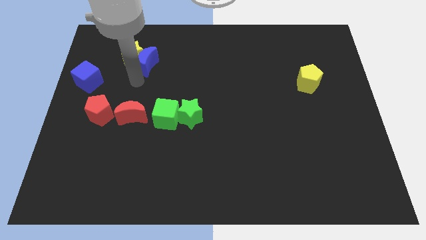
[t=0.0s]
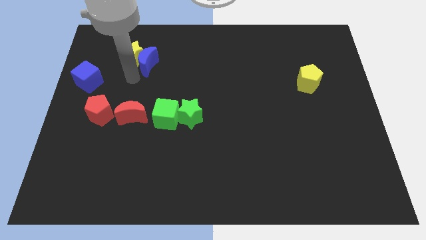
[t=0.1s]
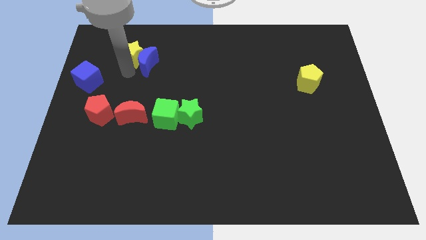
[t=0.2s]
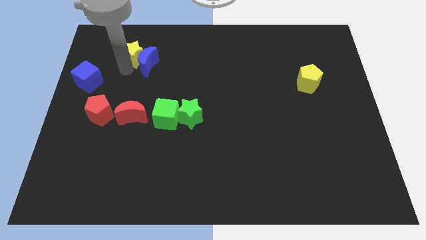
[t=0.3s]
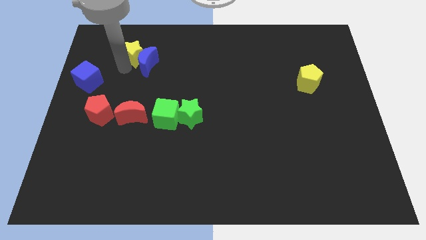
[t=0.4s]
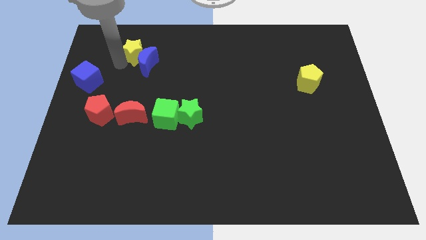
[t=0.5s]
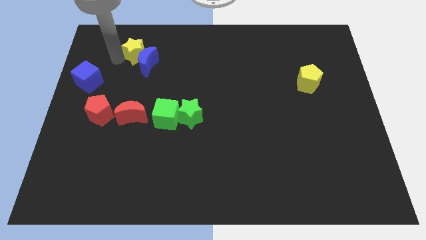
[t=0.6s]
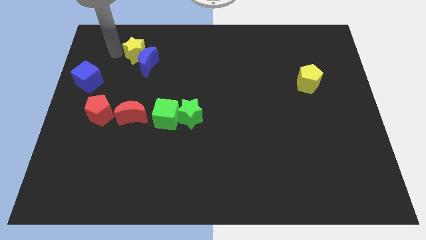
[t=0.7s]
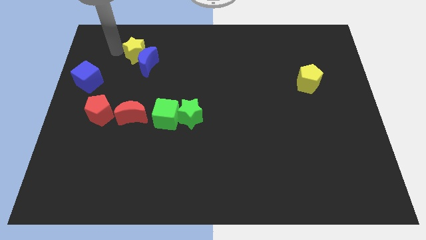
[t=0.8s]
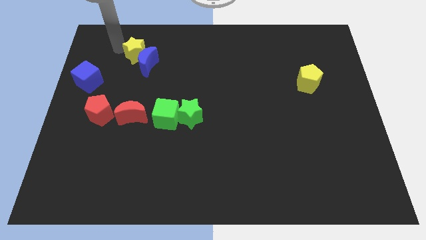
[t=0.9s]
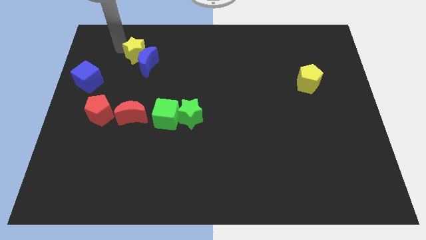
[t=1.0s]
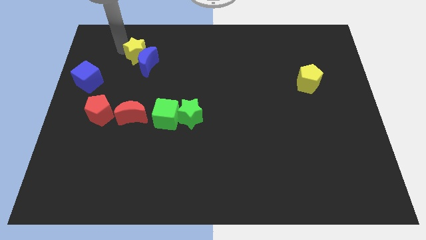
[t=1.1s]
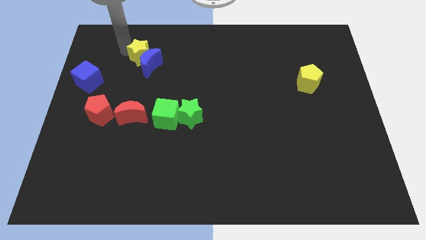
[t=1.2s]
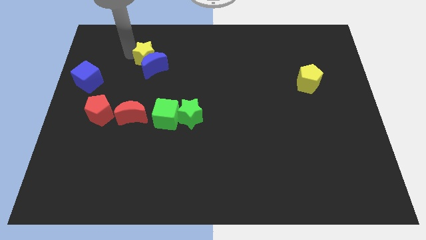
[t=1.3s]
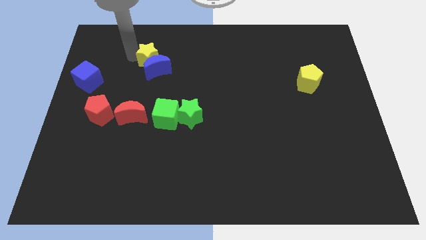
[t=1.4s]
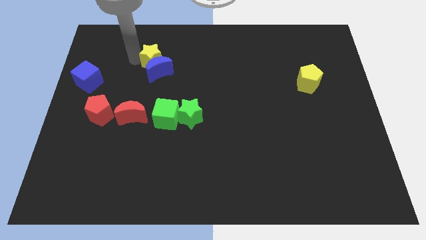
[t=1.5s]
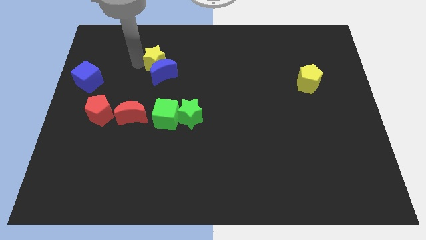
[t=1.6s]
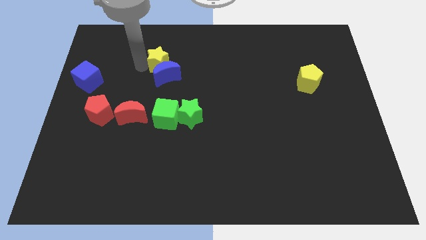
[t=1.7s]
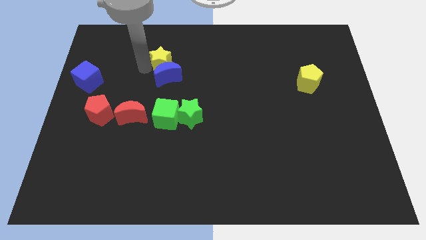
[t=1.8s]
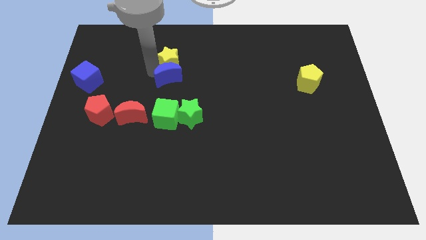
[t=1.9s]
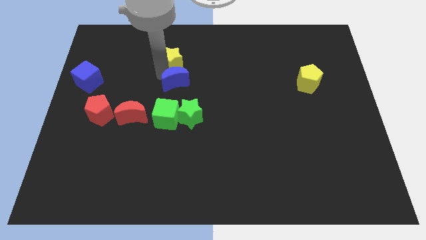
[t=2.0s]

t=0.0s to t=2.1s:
push blue crescent above green cube

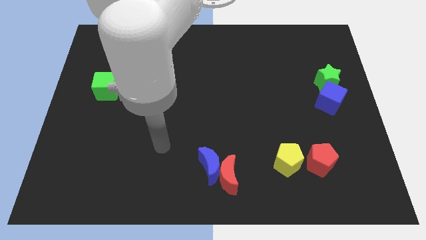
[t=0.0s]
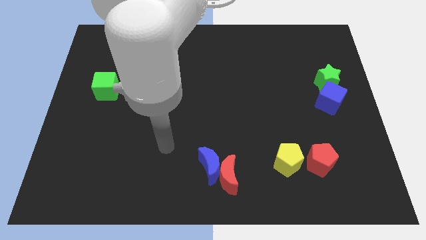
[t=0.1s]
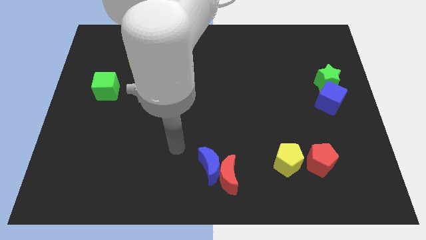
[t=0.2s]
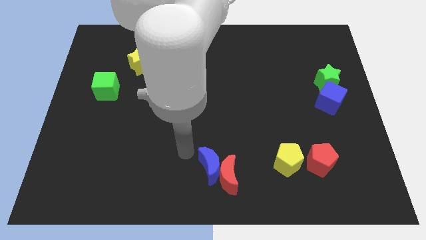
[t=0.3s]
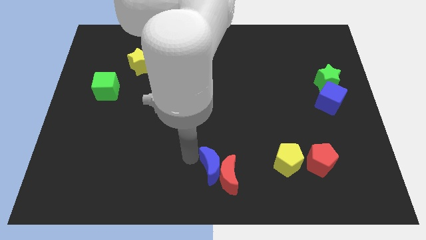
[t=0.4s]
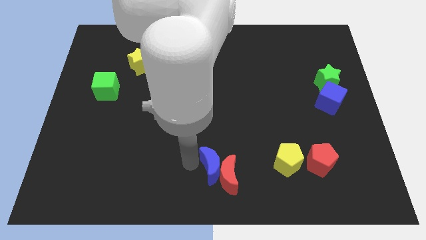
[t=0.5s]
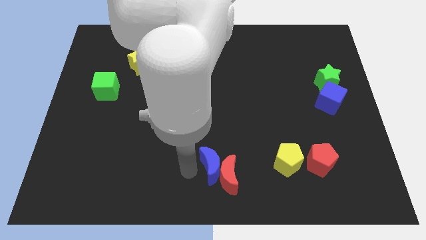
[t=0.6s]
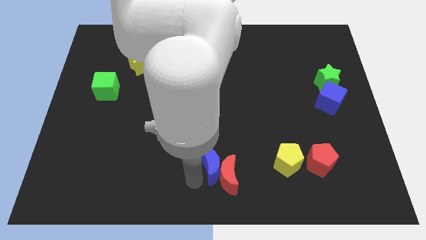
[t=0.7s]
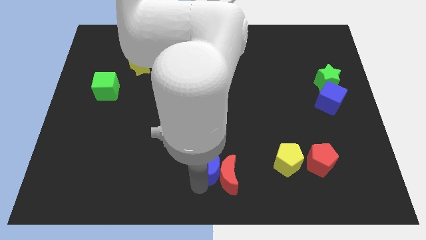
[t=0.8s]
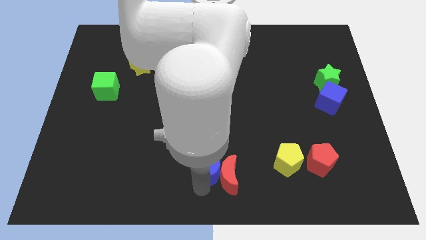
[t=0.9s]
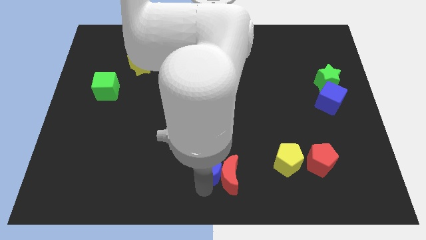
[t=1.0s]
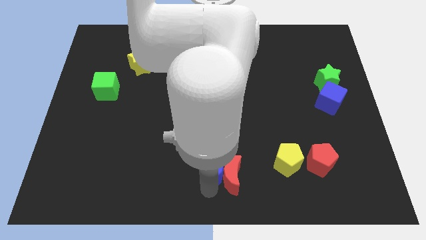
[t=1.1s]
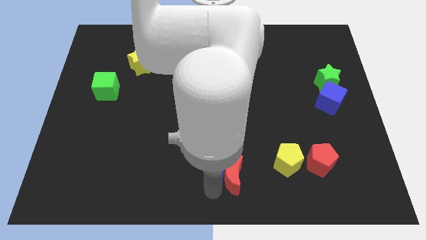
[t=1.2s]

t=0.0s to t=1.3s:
slightly push the blue crescent into the red crescent

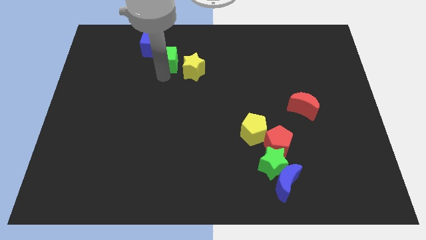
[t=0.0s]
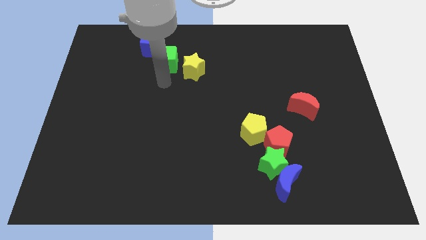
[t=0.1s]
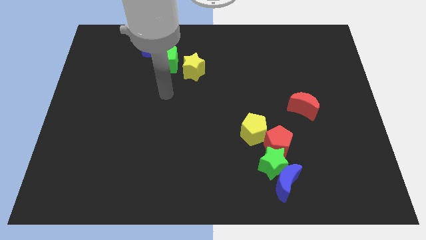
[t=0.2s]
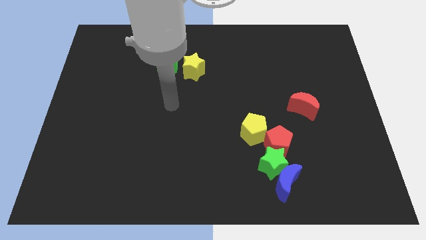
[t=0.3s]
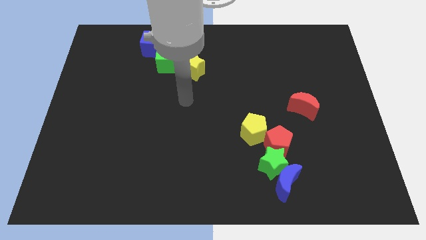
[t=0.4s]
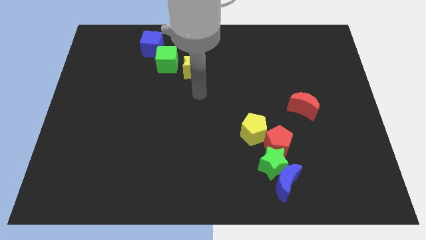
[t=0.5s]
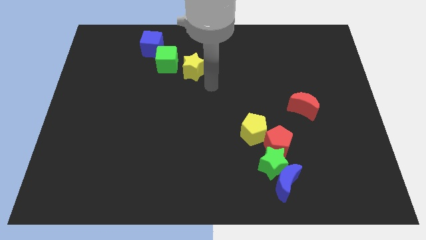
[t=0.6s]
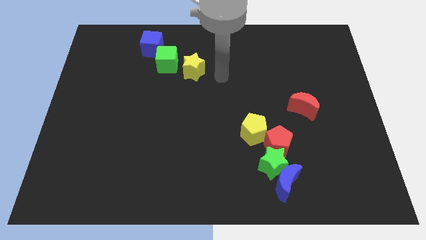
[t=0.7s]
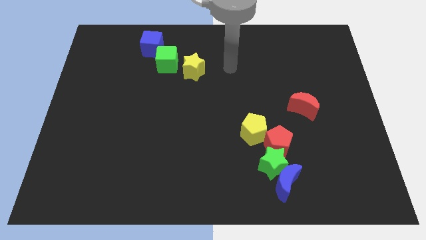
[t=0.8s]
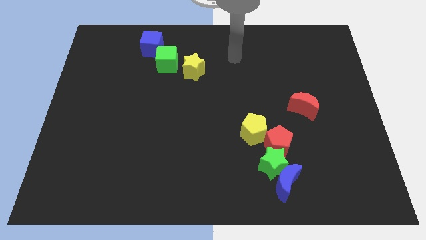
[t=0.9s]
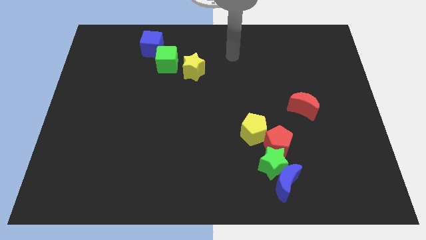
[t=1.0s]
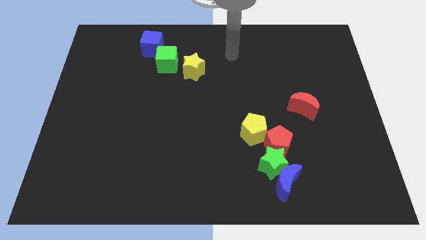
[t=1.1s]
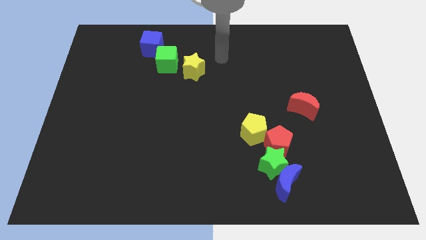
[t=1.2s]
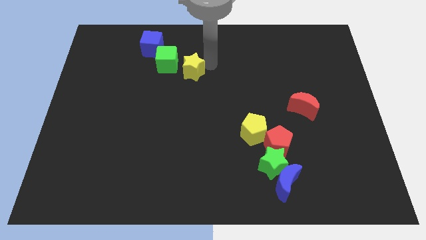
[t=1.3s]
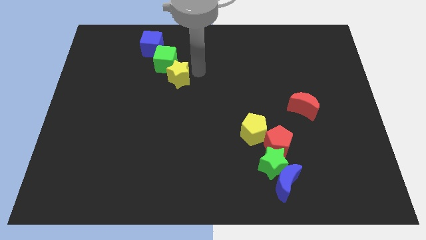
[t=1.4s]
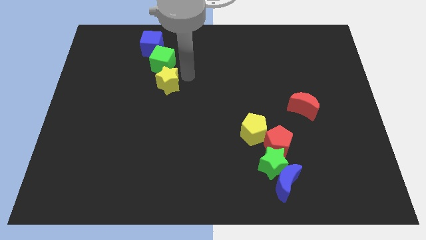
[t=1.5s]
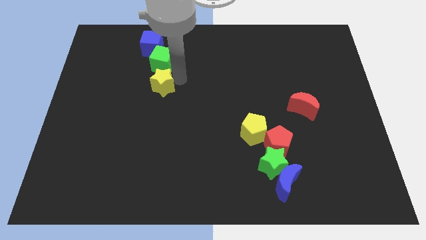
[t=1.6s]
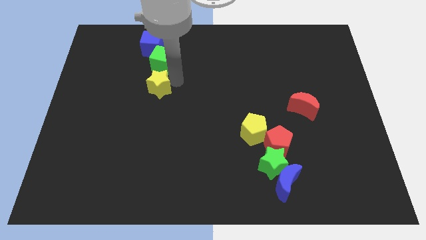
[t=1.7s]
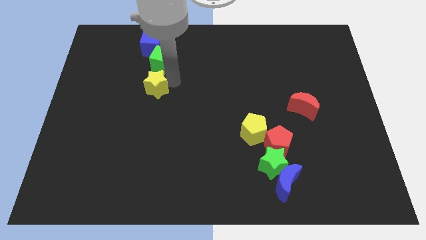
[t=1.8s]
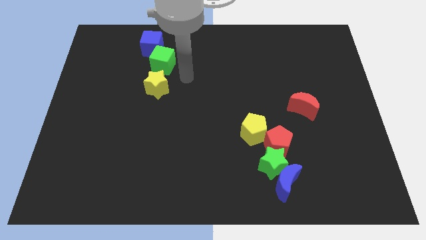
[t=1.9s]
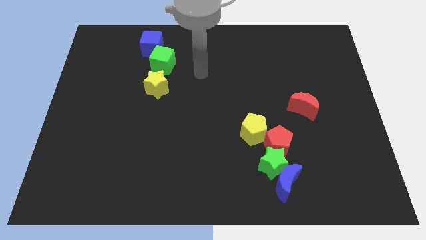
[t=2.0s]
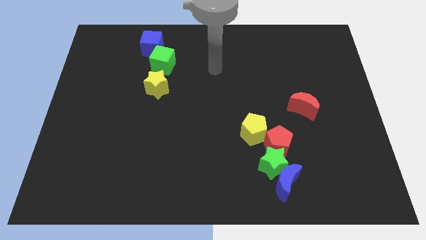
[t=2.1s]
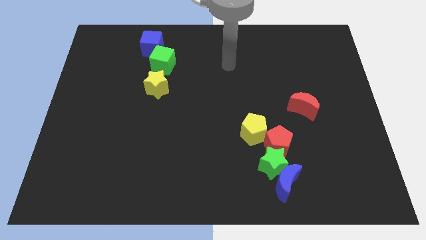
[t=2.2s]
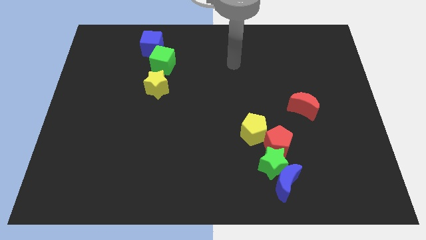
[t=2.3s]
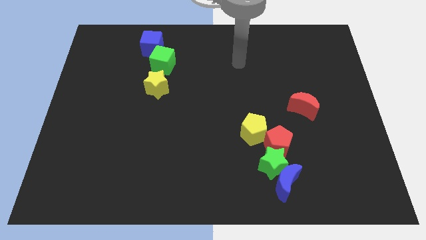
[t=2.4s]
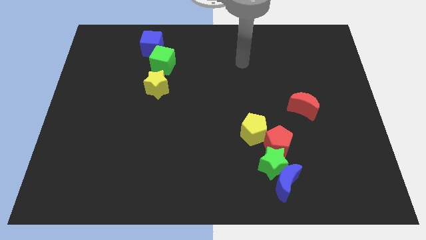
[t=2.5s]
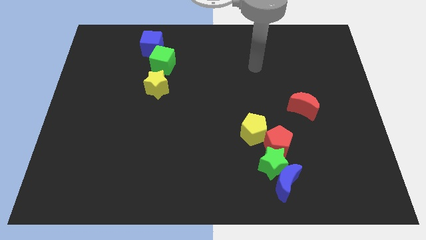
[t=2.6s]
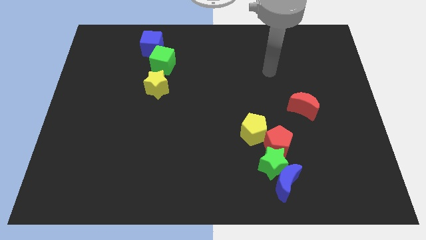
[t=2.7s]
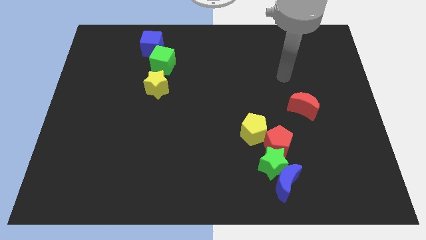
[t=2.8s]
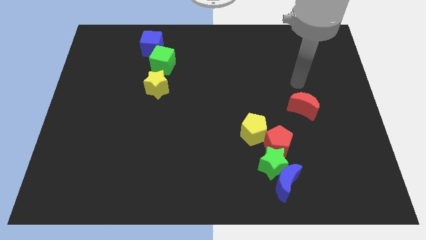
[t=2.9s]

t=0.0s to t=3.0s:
move the yellow star to the bottom of the green cube

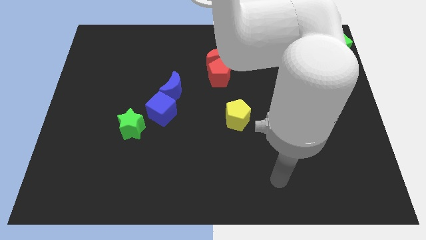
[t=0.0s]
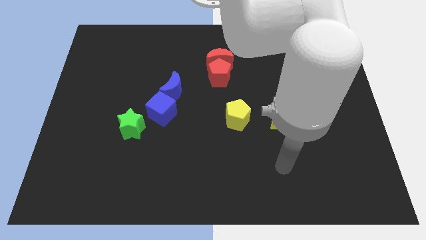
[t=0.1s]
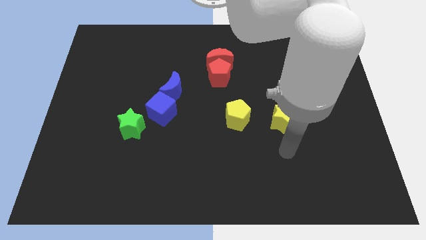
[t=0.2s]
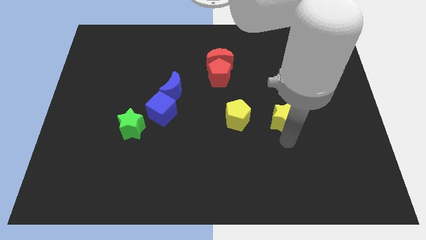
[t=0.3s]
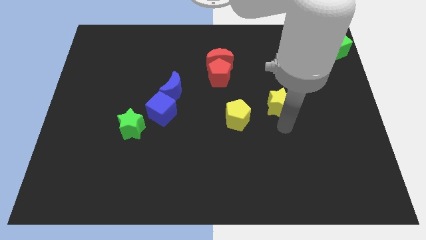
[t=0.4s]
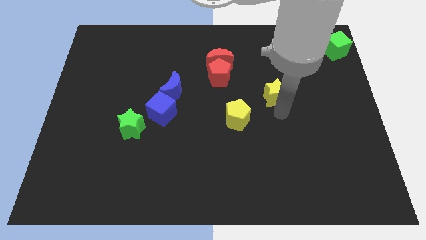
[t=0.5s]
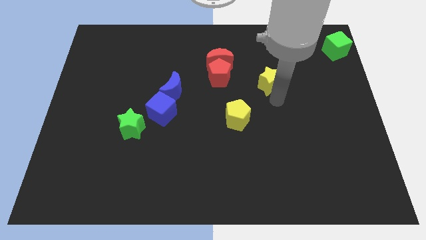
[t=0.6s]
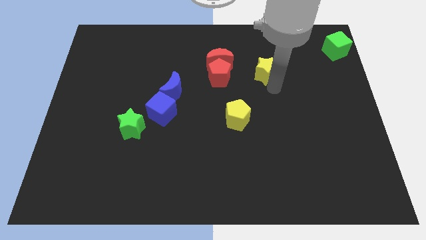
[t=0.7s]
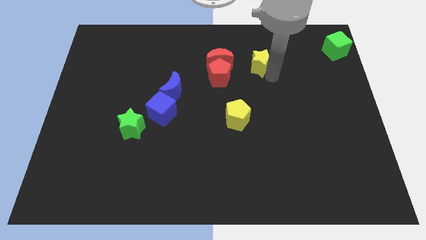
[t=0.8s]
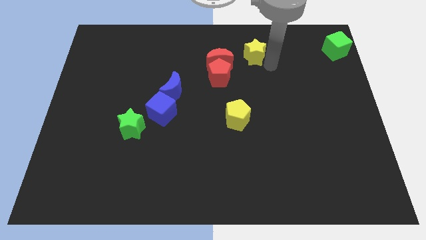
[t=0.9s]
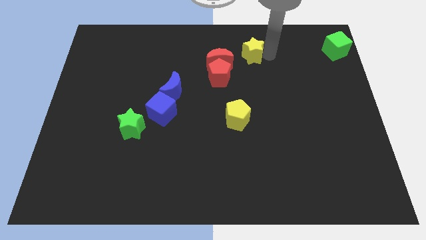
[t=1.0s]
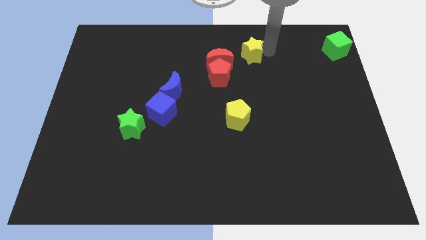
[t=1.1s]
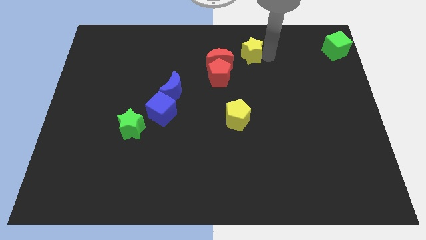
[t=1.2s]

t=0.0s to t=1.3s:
pull the yellow star towards top side of the board

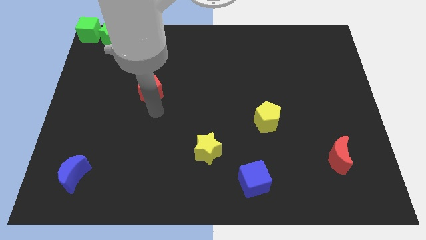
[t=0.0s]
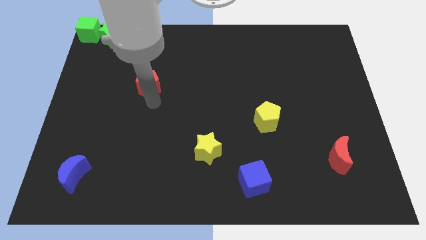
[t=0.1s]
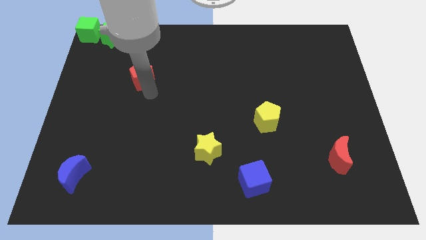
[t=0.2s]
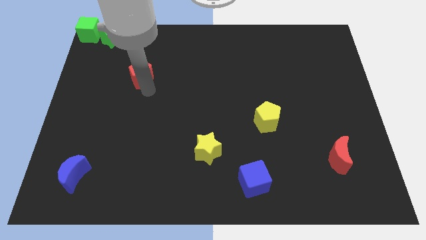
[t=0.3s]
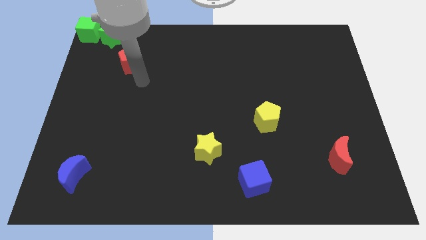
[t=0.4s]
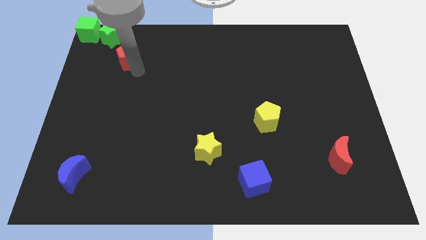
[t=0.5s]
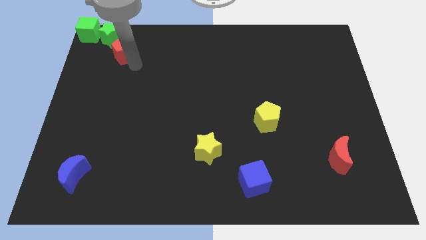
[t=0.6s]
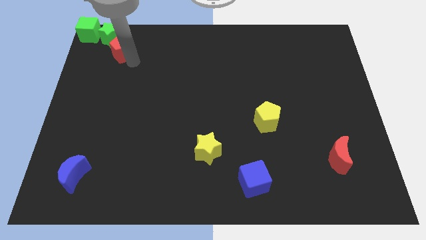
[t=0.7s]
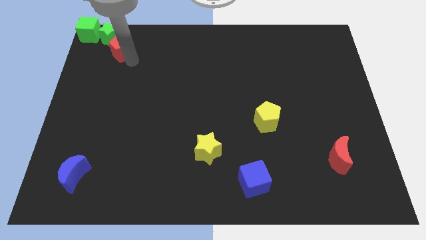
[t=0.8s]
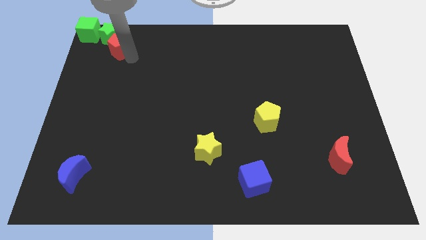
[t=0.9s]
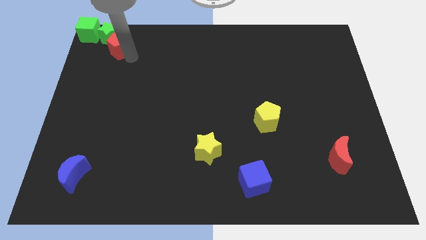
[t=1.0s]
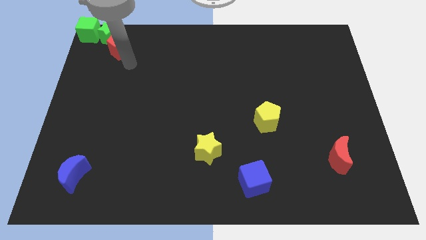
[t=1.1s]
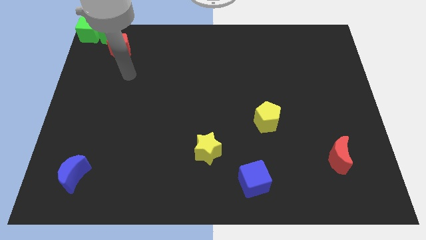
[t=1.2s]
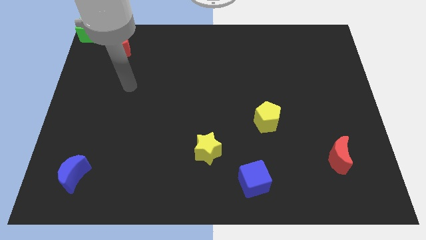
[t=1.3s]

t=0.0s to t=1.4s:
push red pentagon below green star
